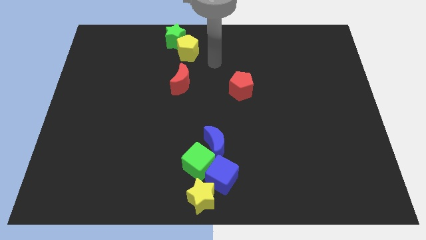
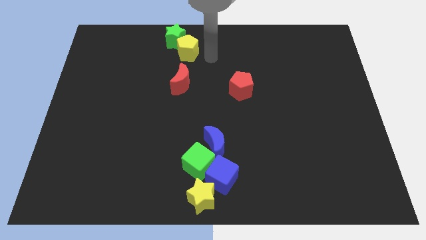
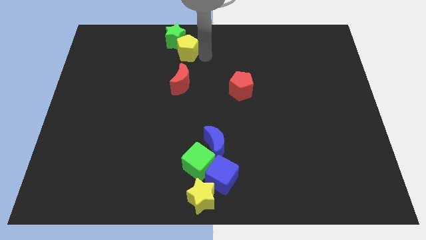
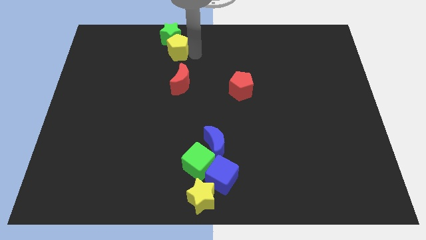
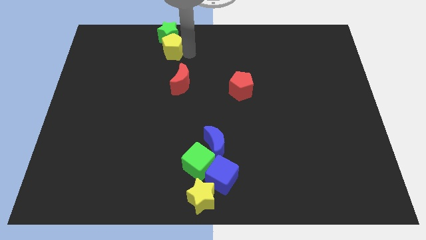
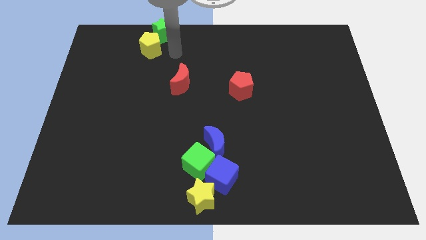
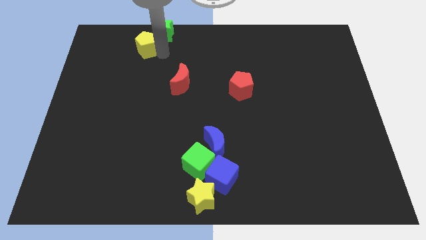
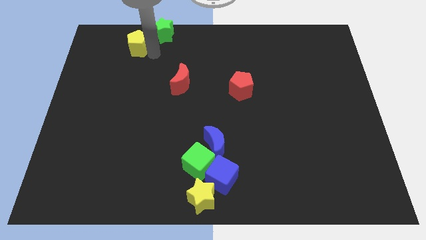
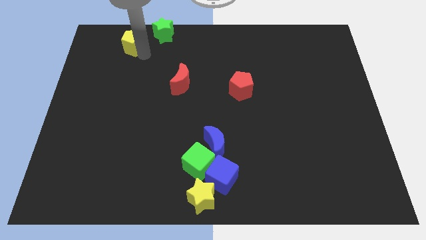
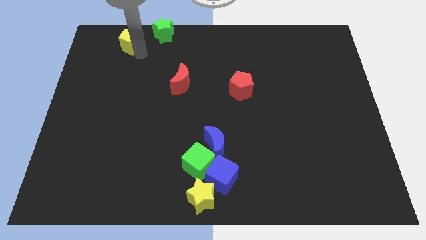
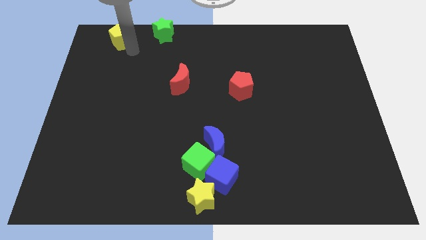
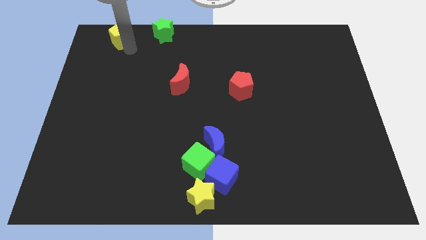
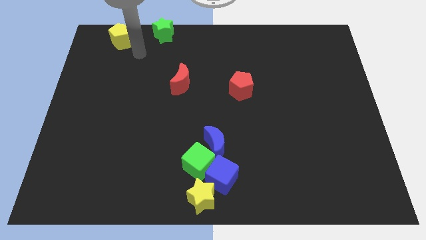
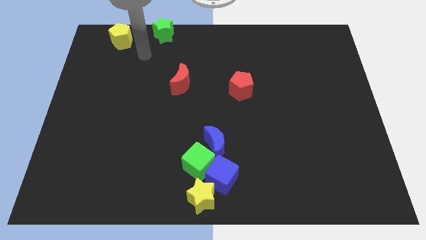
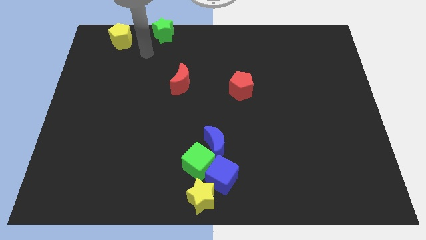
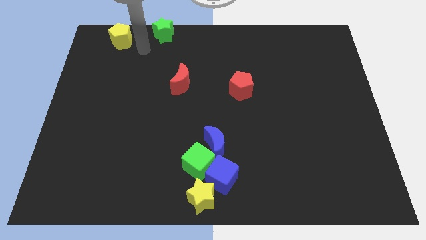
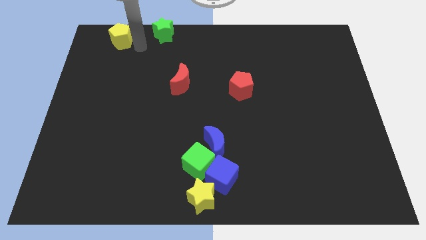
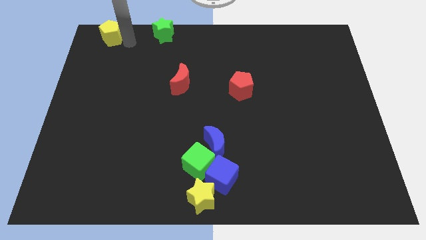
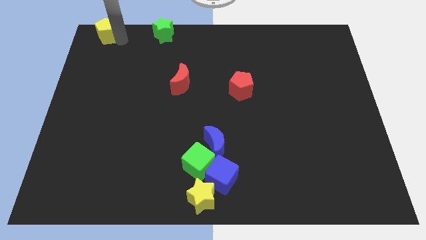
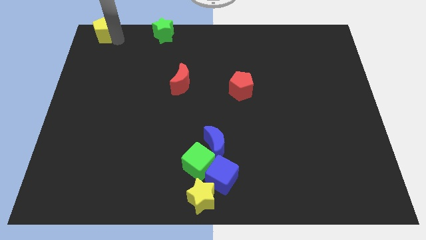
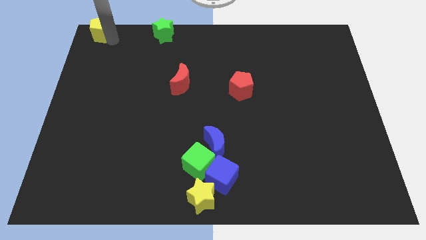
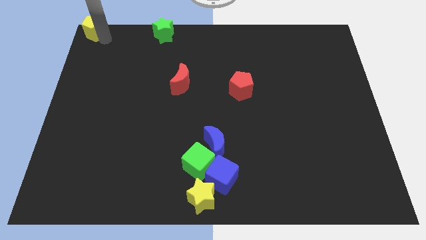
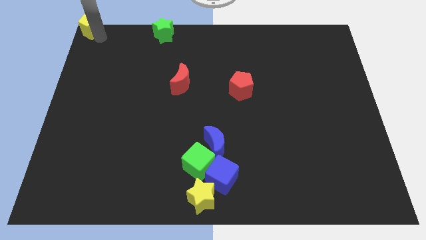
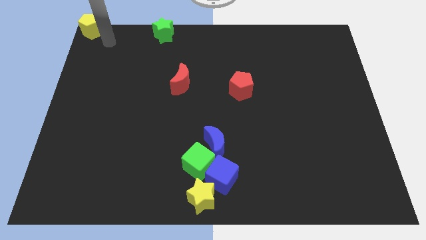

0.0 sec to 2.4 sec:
move the yellow pentagon to the top left corner of the board

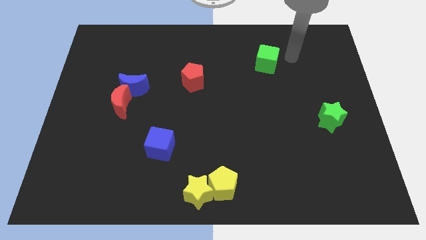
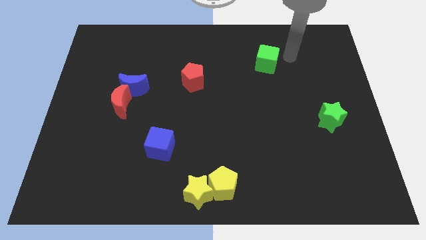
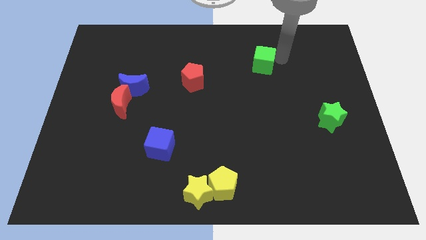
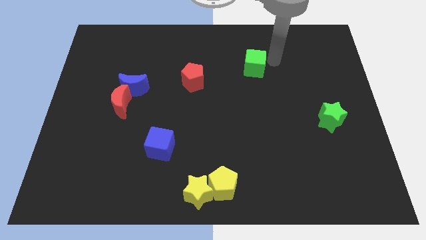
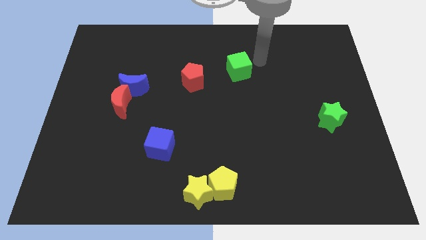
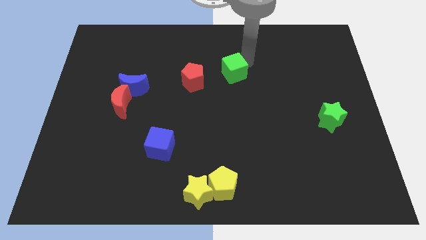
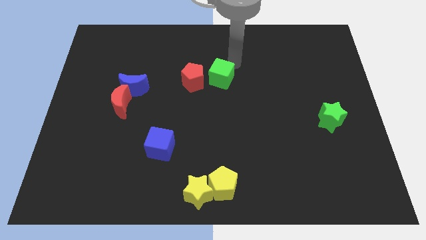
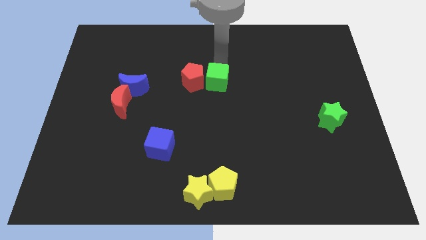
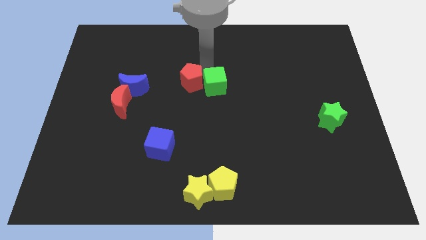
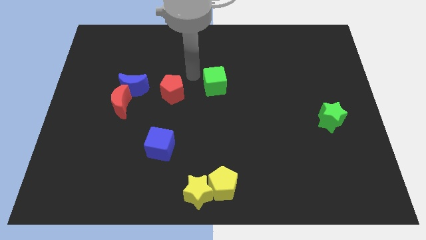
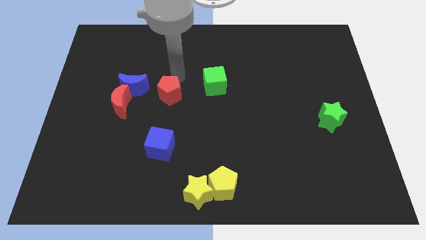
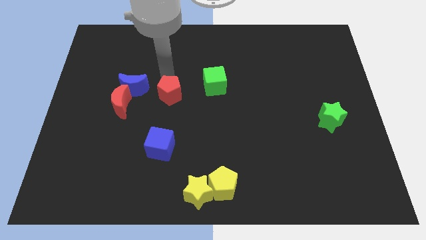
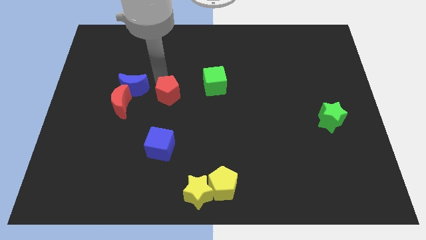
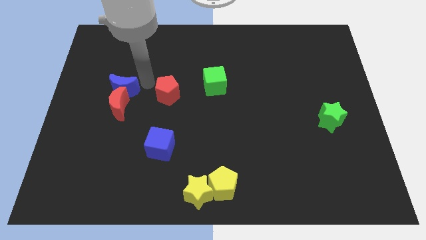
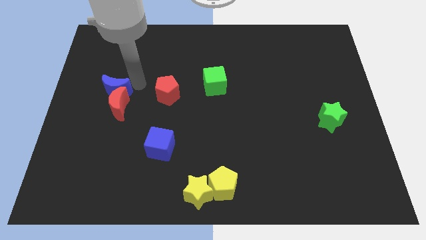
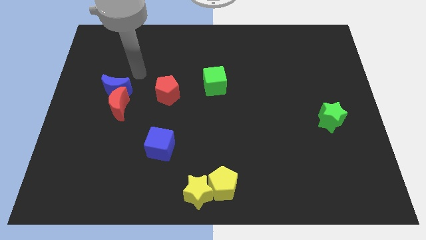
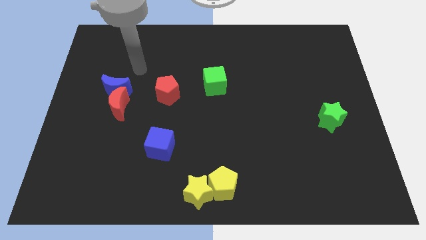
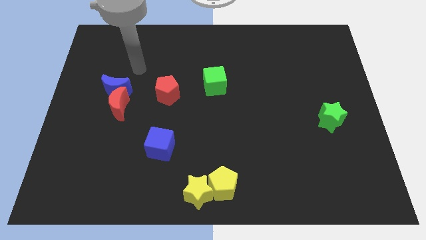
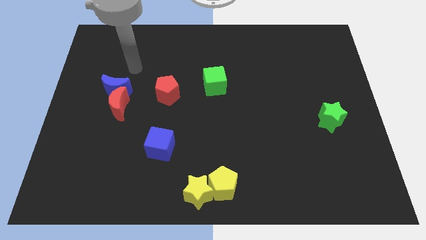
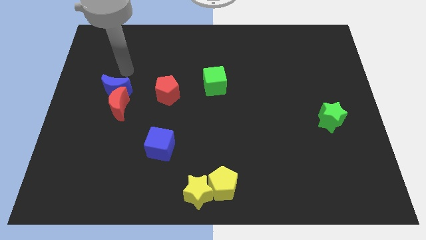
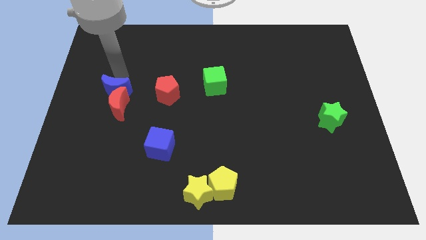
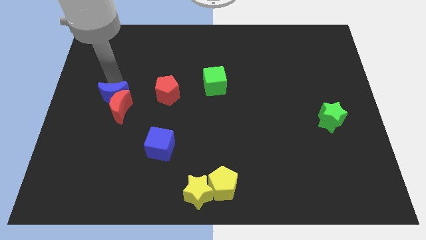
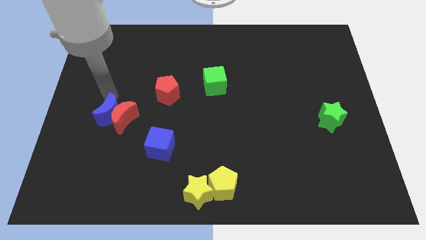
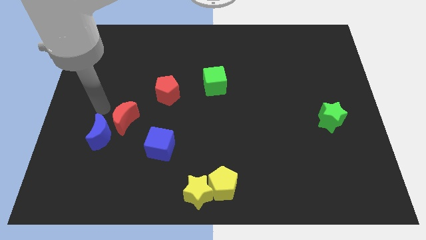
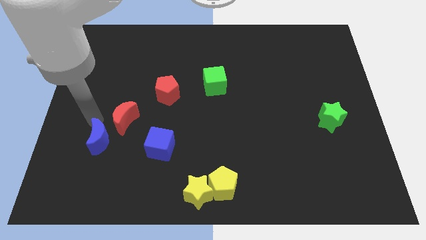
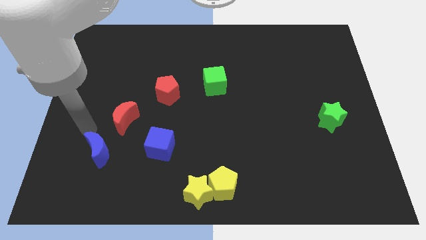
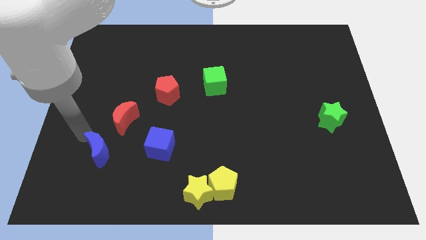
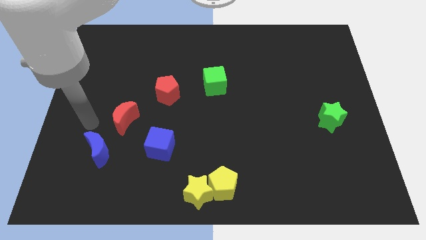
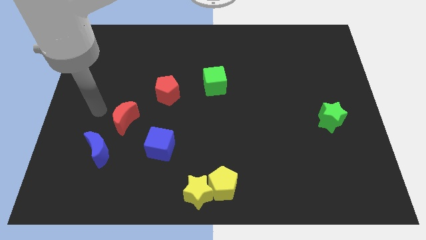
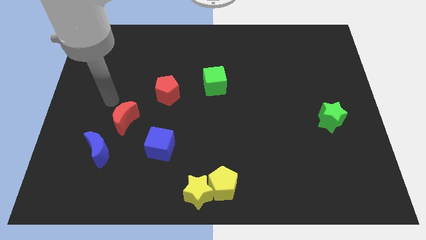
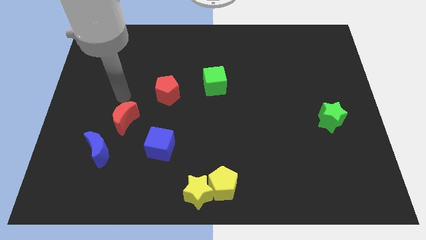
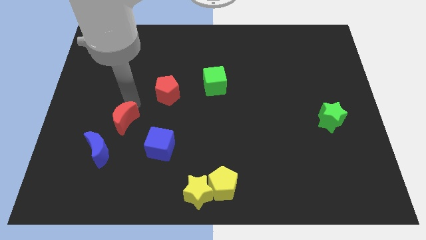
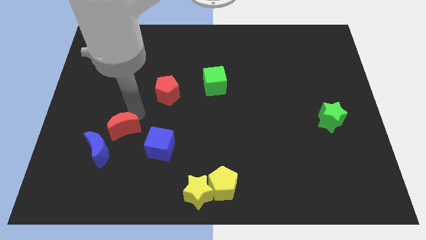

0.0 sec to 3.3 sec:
push blue crescent left to the blue cube

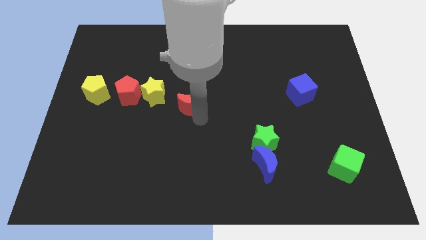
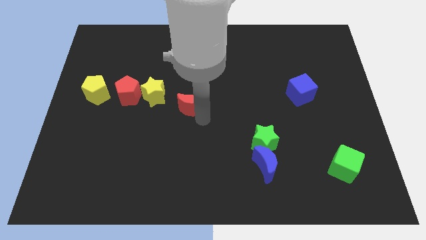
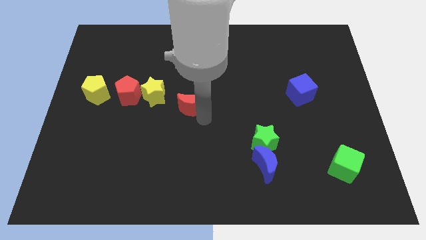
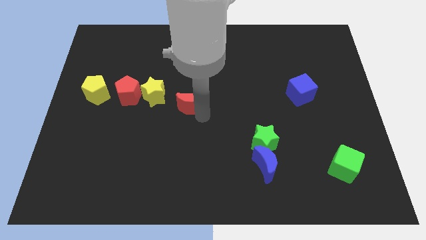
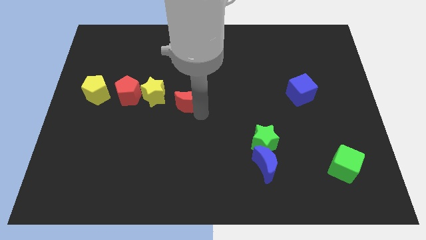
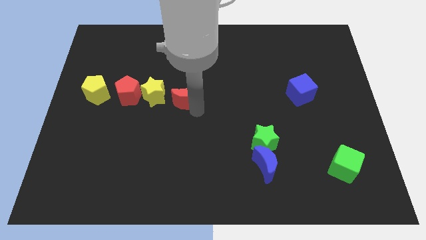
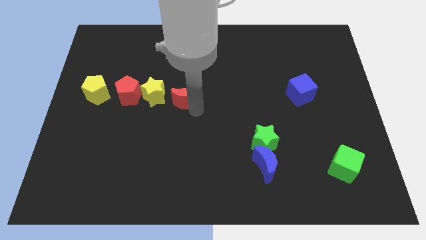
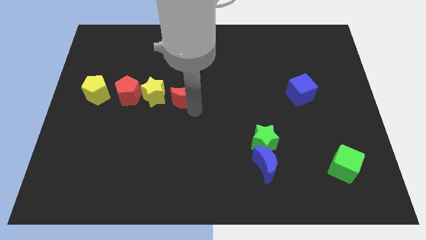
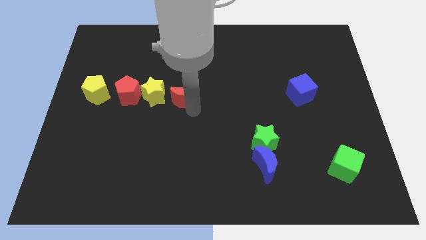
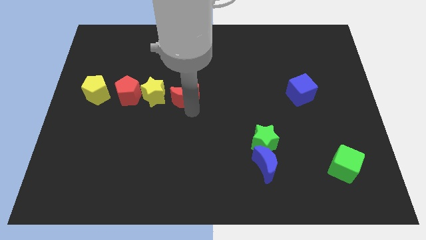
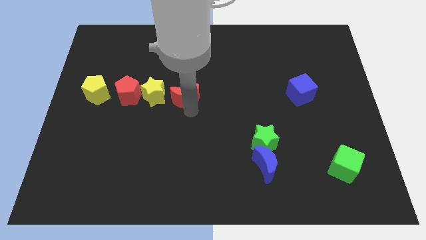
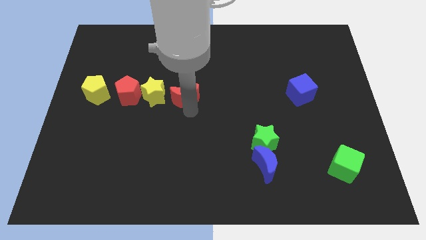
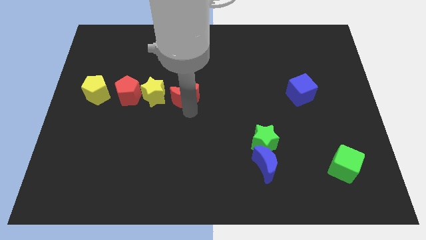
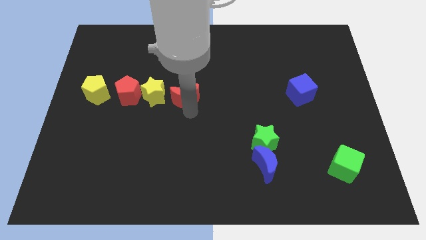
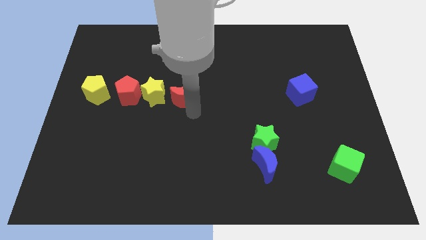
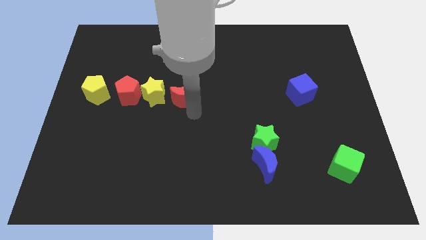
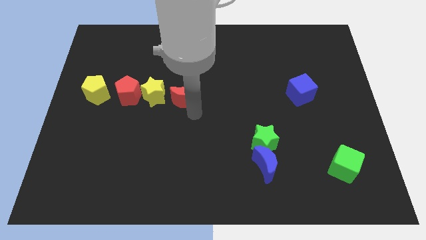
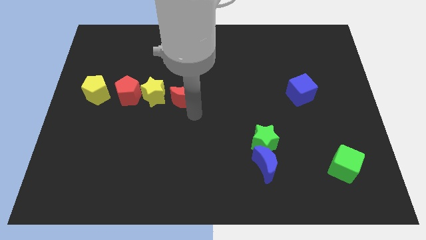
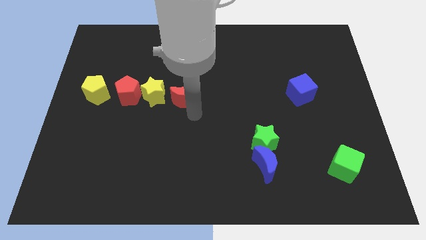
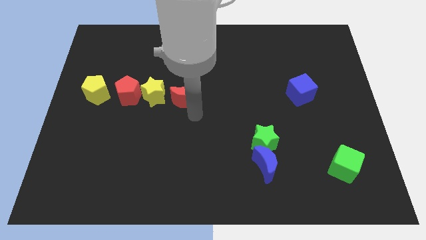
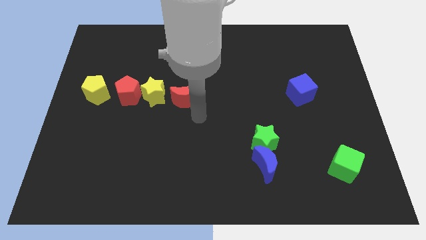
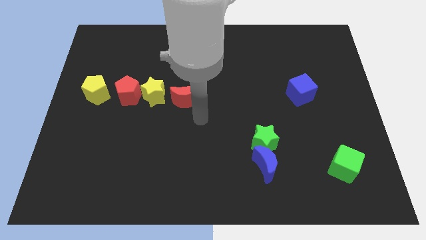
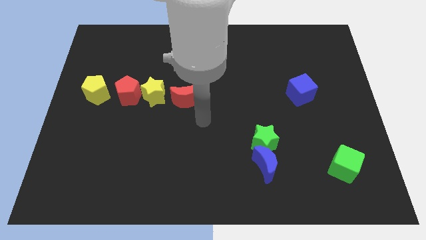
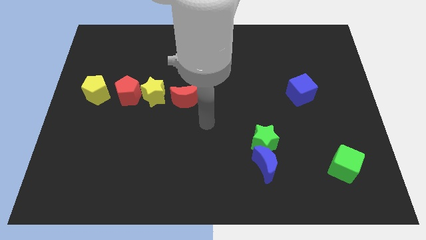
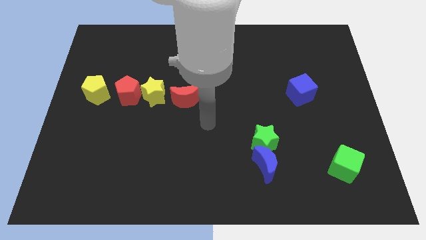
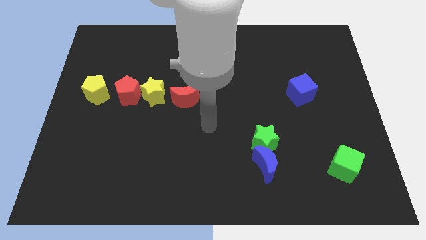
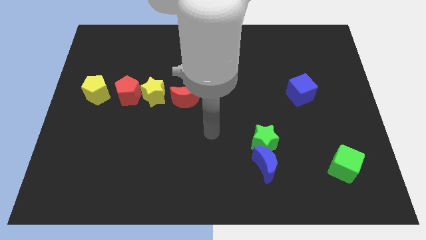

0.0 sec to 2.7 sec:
move the red crescent to the right side of the yellow star

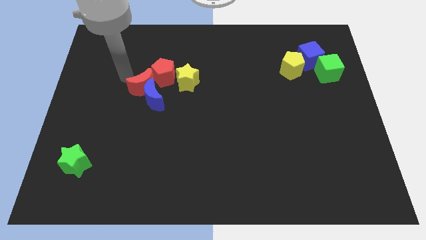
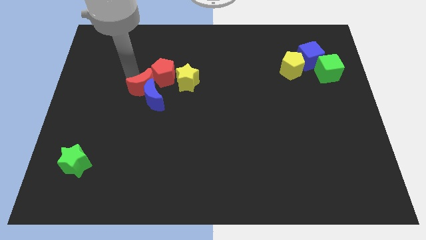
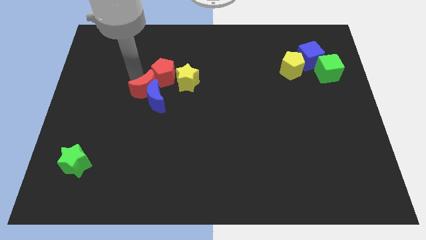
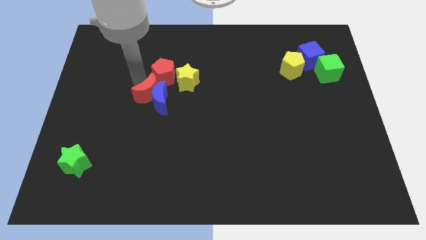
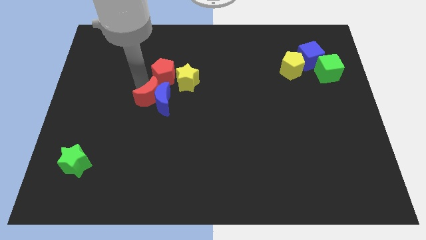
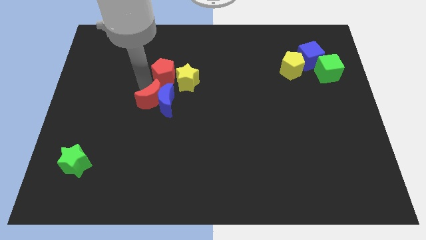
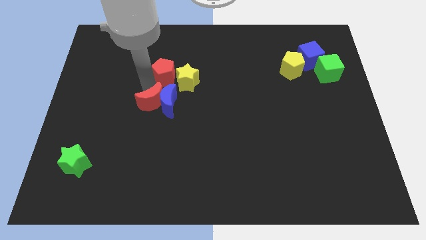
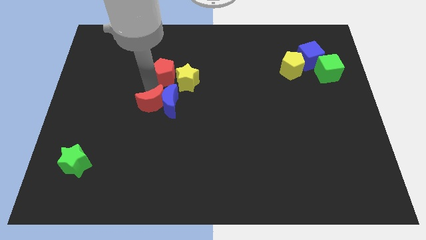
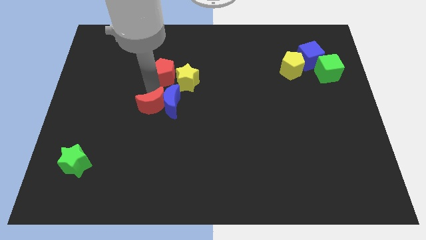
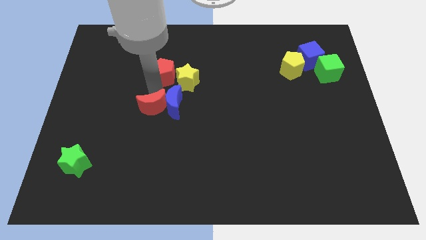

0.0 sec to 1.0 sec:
push the red and blue moons towards the bottom side of the board
